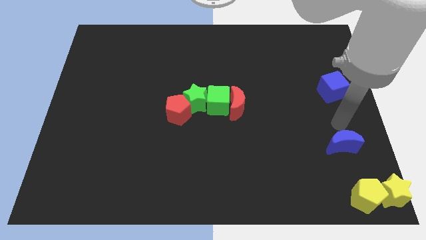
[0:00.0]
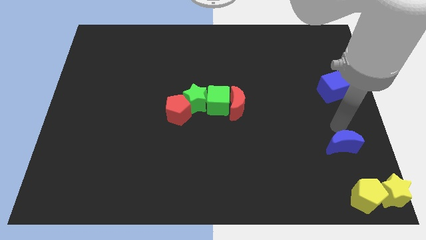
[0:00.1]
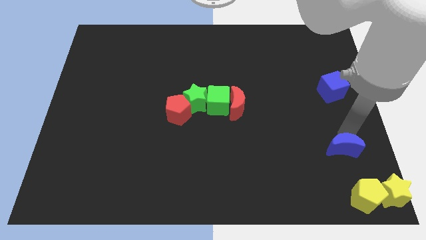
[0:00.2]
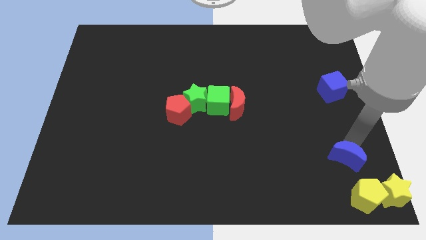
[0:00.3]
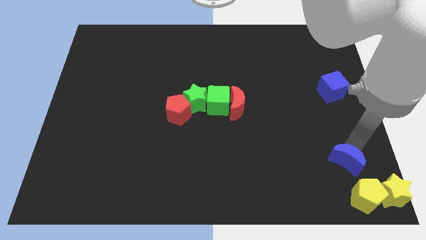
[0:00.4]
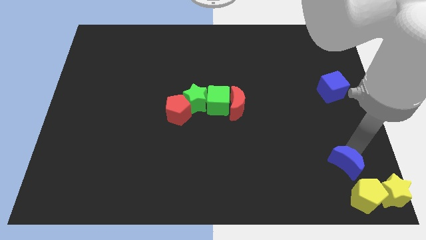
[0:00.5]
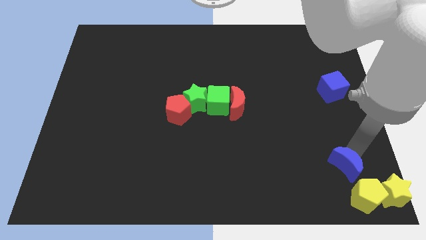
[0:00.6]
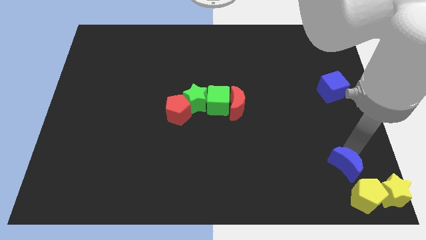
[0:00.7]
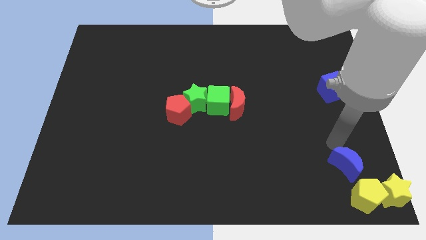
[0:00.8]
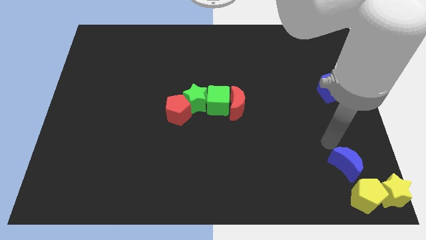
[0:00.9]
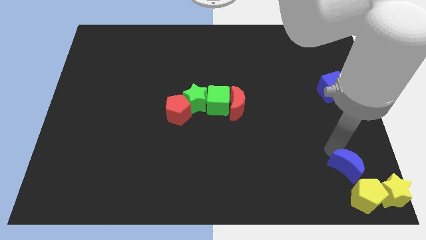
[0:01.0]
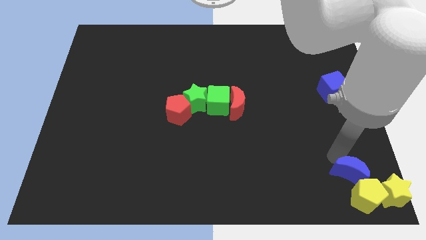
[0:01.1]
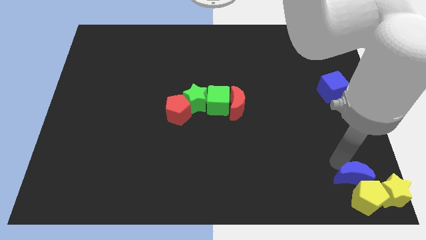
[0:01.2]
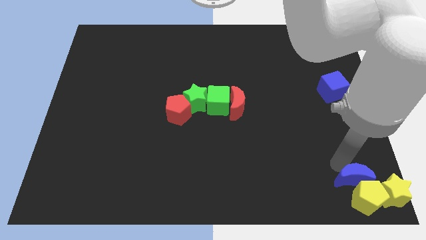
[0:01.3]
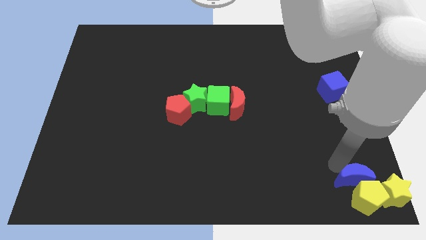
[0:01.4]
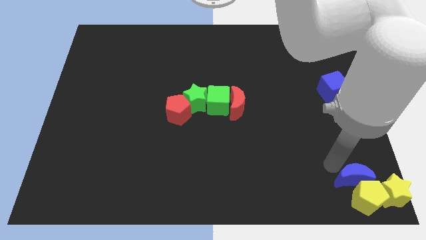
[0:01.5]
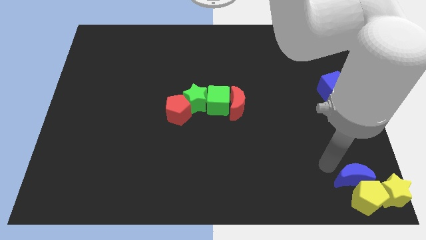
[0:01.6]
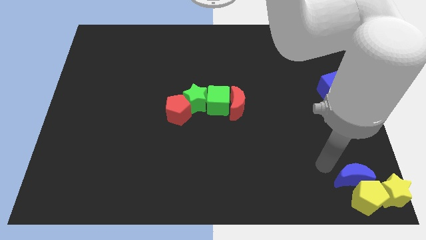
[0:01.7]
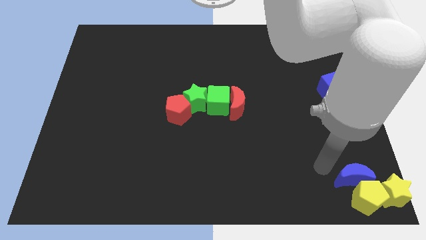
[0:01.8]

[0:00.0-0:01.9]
move the blue crescent to the top of the yellow pentagon

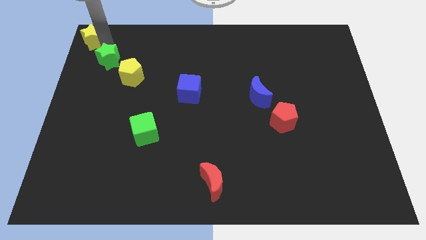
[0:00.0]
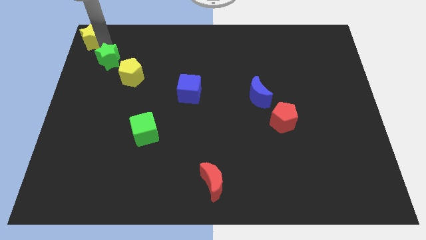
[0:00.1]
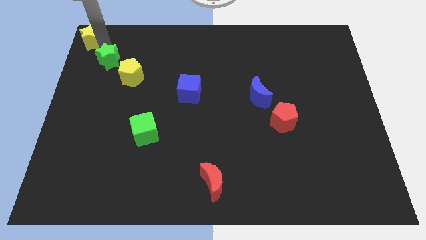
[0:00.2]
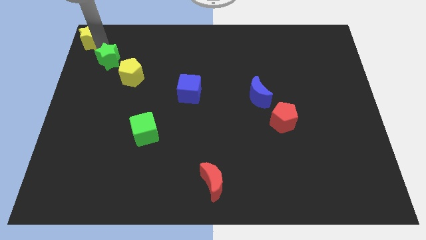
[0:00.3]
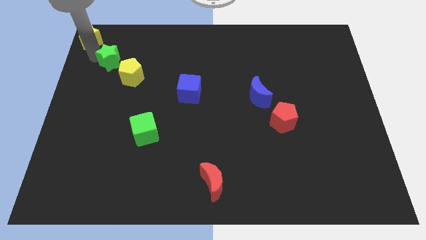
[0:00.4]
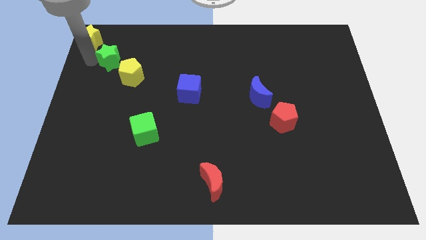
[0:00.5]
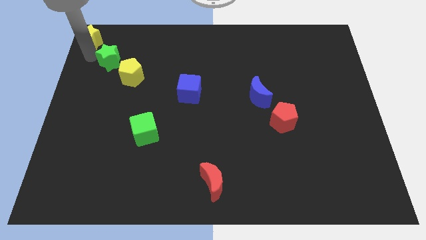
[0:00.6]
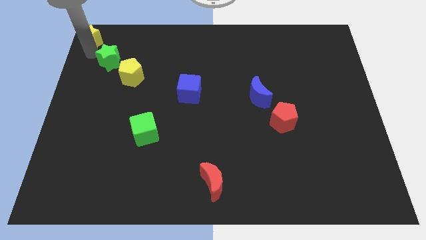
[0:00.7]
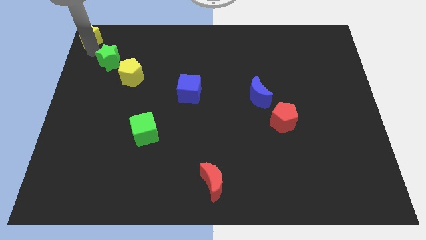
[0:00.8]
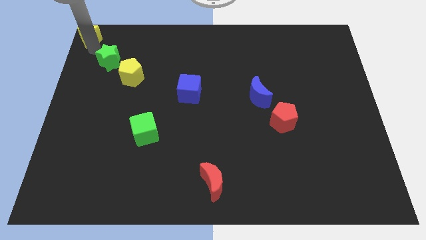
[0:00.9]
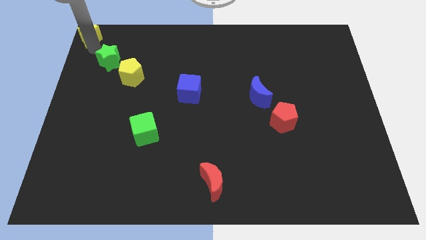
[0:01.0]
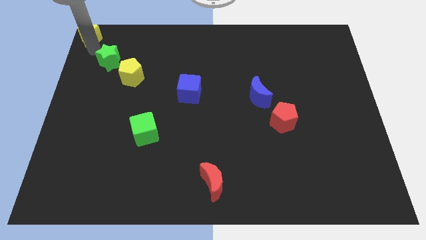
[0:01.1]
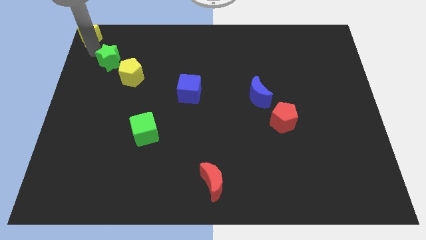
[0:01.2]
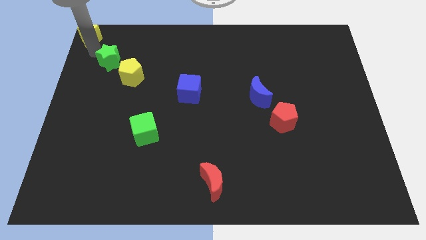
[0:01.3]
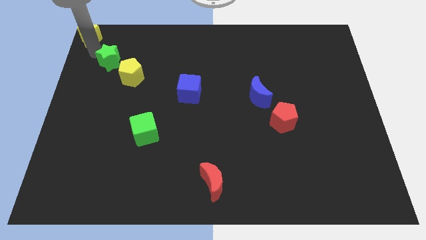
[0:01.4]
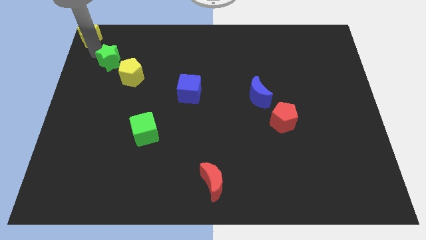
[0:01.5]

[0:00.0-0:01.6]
slightly push the yellow star towards the top left corner of the board

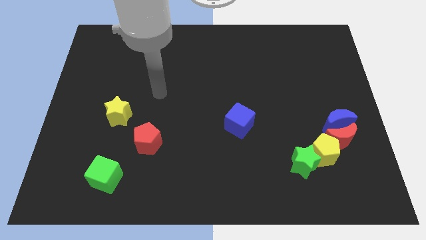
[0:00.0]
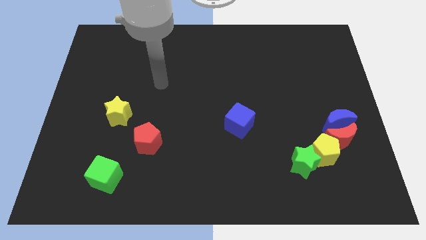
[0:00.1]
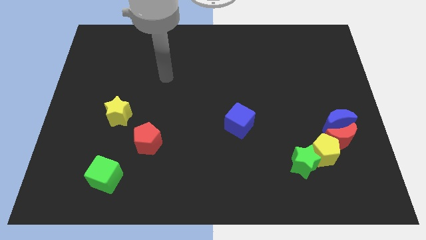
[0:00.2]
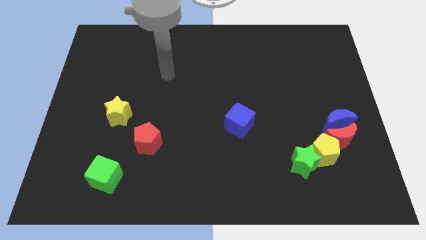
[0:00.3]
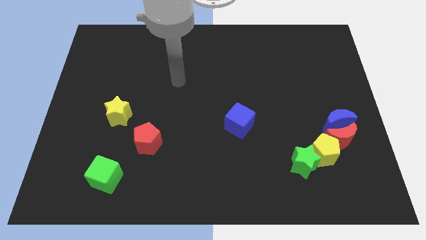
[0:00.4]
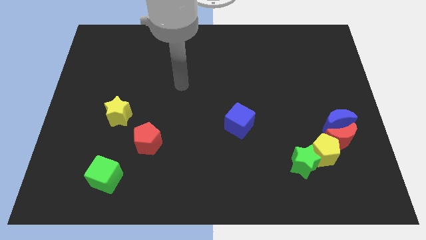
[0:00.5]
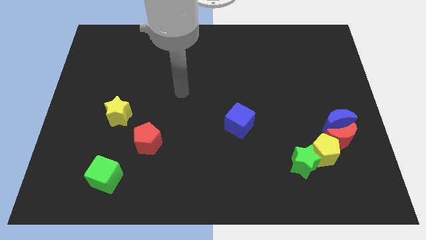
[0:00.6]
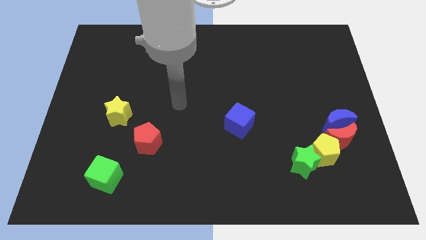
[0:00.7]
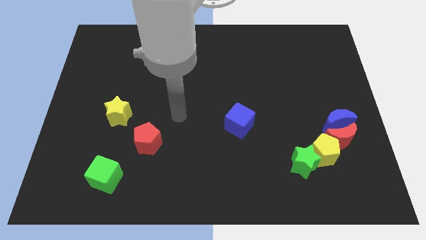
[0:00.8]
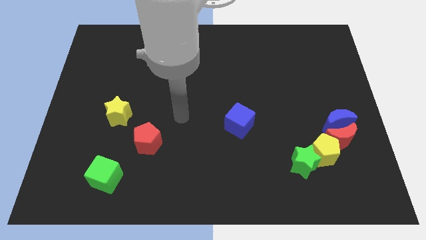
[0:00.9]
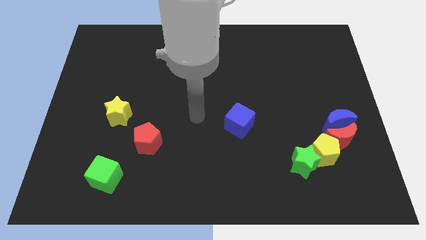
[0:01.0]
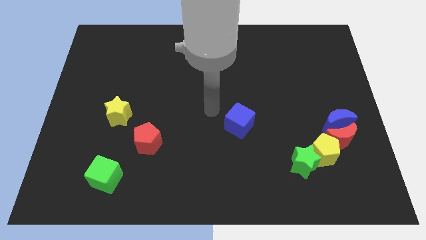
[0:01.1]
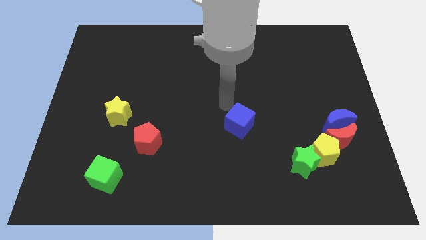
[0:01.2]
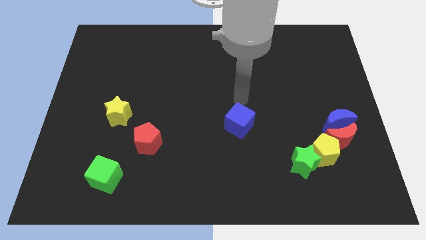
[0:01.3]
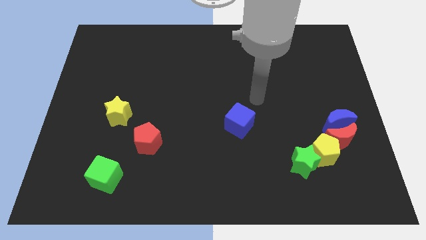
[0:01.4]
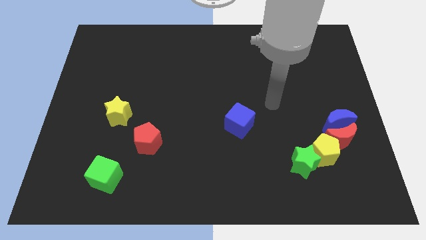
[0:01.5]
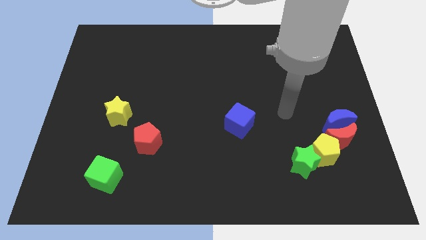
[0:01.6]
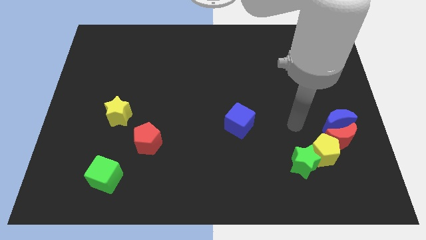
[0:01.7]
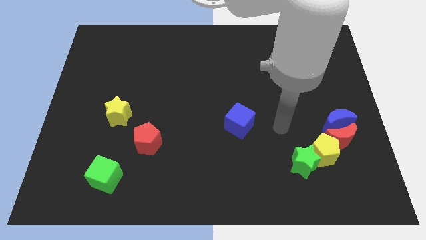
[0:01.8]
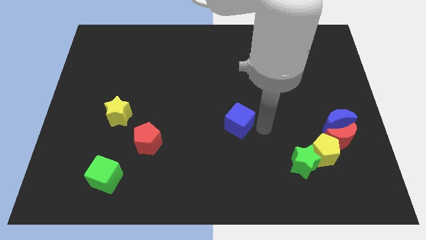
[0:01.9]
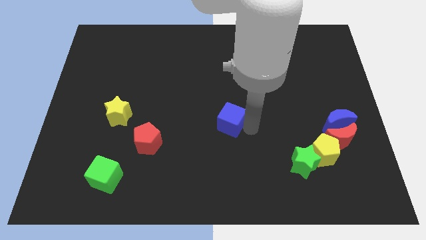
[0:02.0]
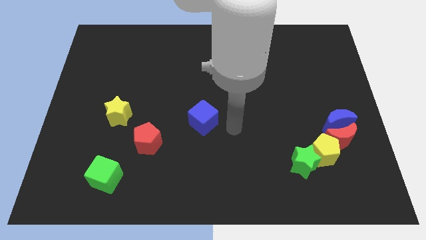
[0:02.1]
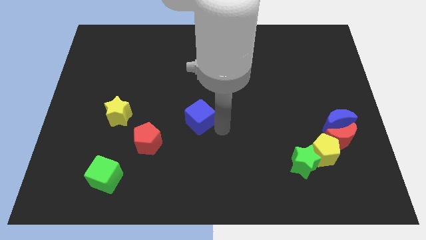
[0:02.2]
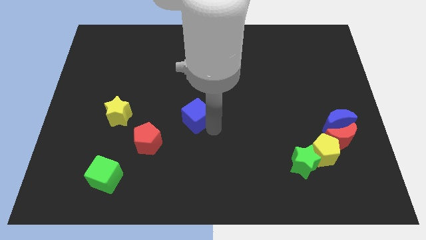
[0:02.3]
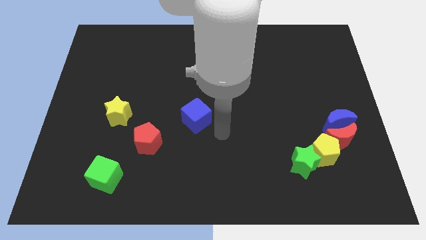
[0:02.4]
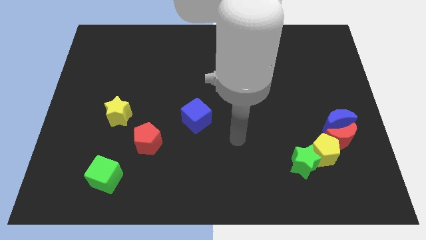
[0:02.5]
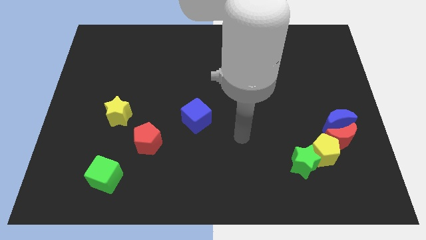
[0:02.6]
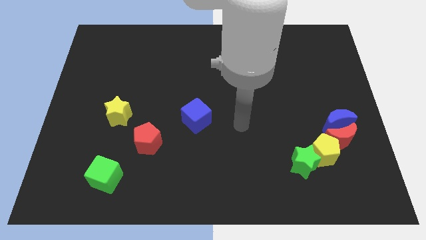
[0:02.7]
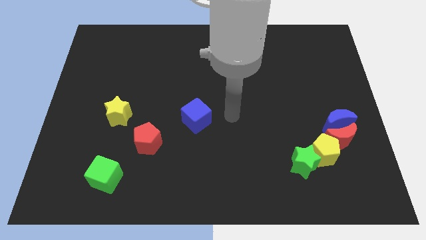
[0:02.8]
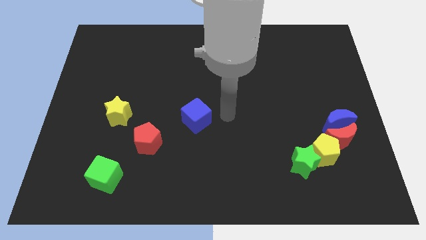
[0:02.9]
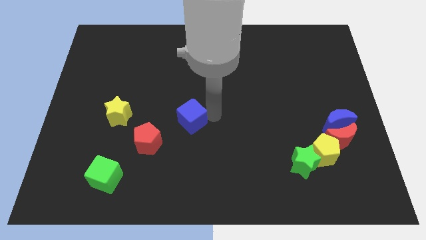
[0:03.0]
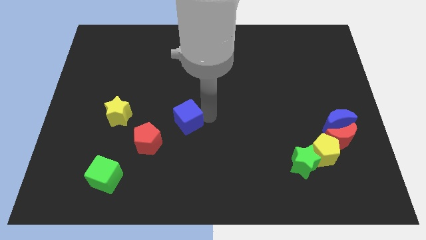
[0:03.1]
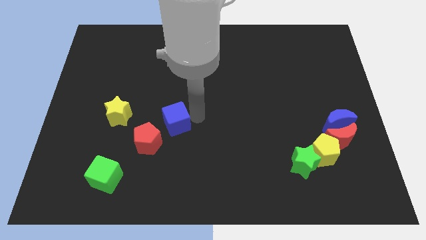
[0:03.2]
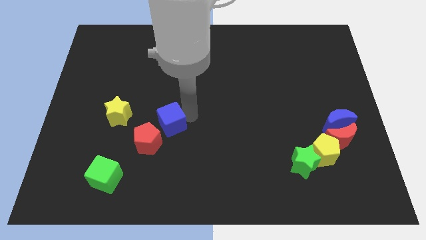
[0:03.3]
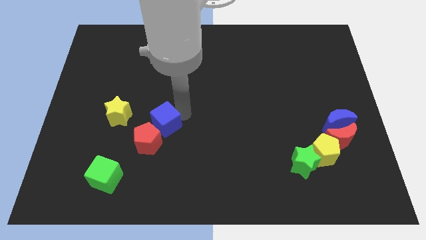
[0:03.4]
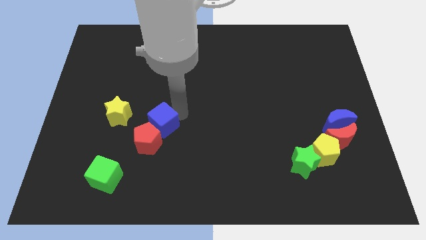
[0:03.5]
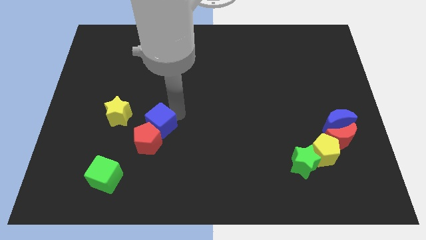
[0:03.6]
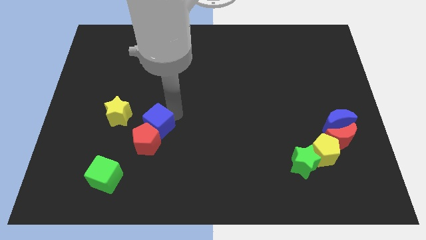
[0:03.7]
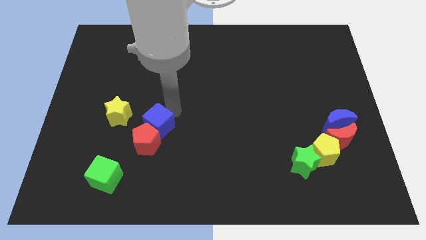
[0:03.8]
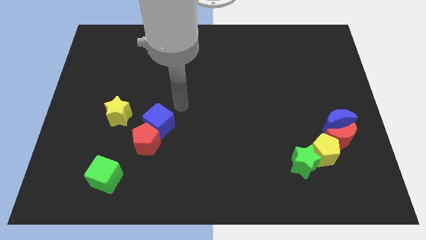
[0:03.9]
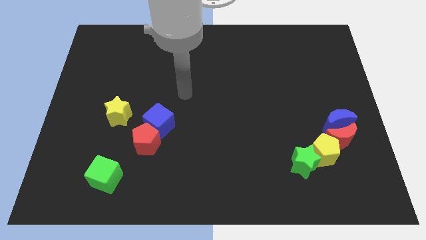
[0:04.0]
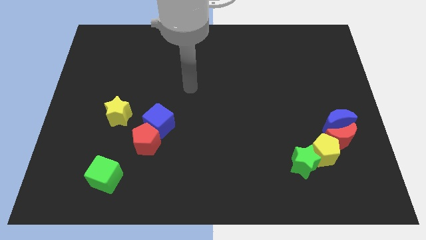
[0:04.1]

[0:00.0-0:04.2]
push the blue cube into the red block

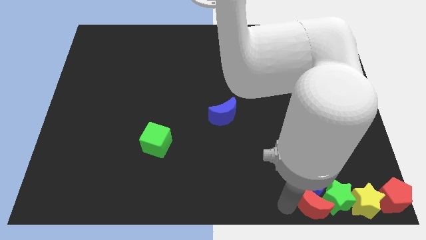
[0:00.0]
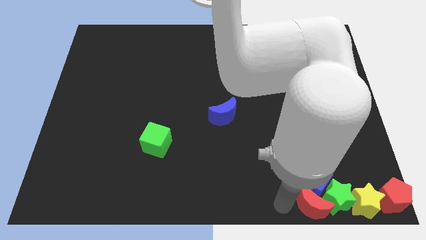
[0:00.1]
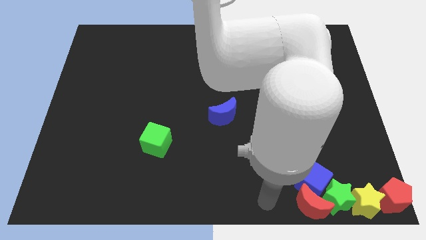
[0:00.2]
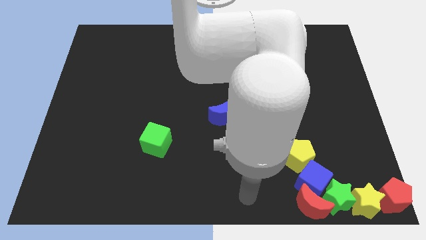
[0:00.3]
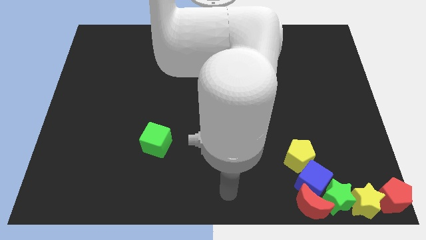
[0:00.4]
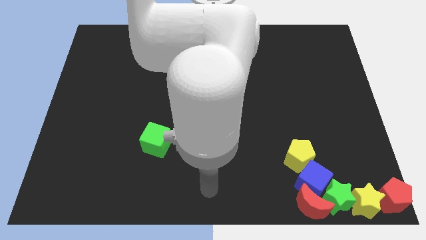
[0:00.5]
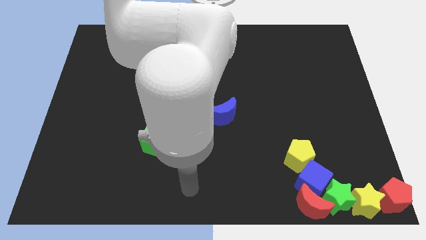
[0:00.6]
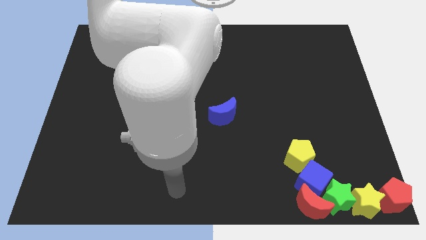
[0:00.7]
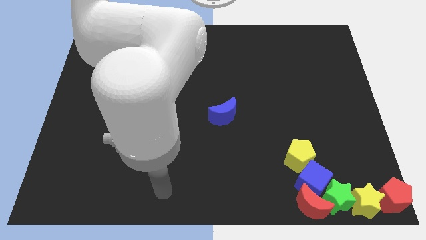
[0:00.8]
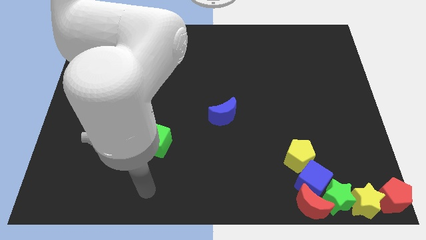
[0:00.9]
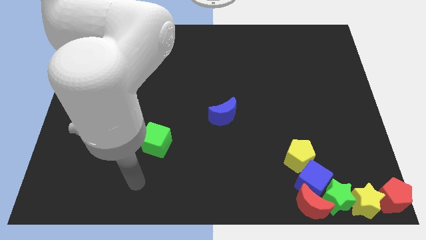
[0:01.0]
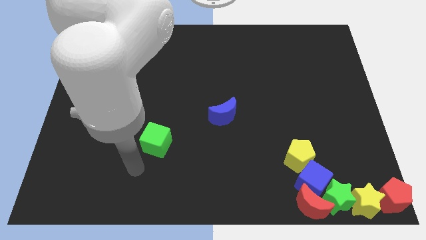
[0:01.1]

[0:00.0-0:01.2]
move the arm away from the red crescent
